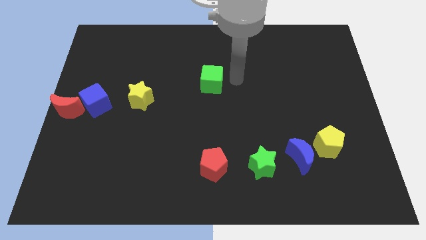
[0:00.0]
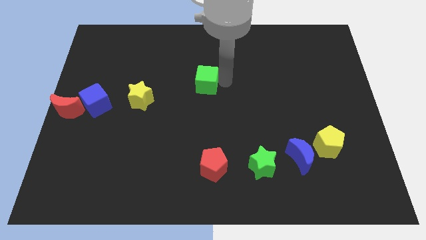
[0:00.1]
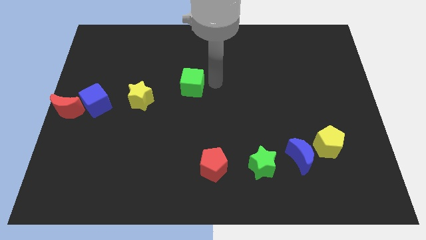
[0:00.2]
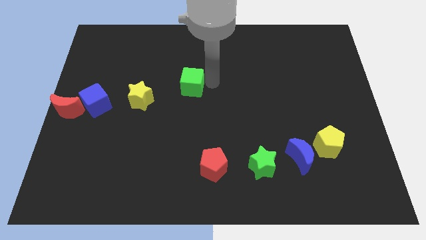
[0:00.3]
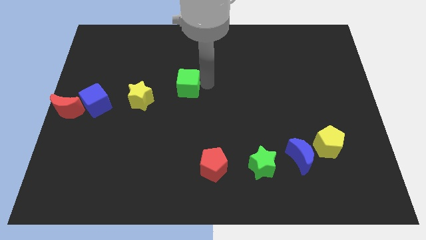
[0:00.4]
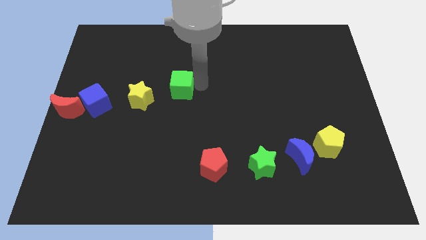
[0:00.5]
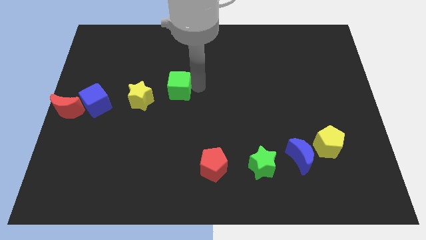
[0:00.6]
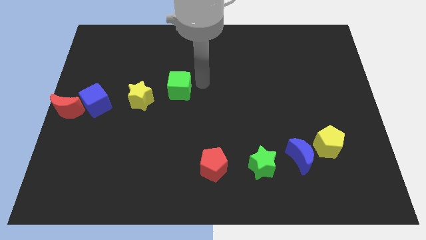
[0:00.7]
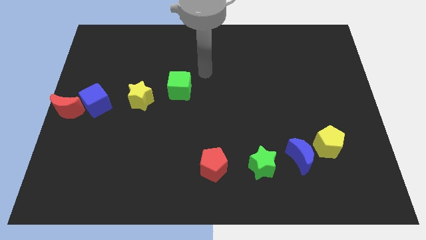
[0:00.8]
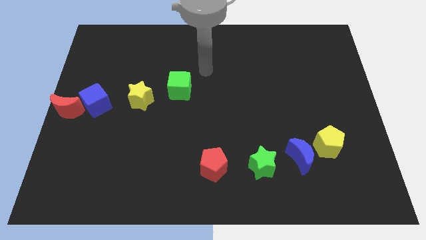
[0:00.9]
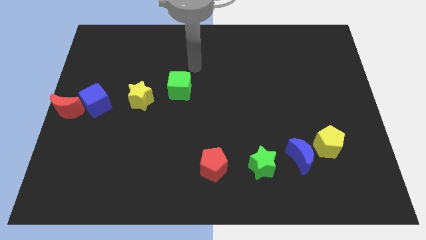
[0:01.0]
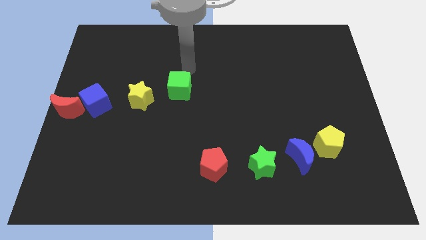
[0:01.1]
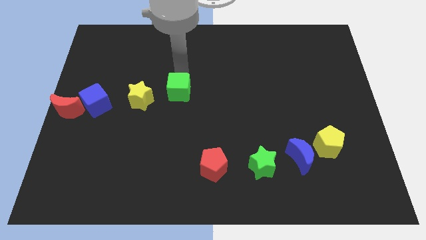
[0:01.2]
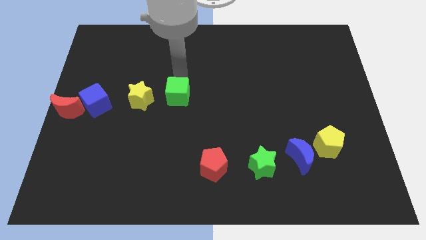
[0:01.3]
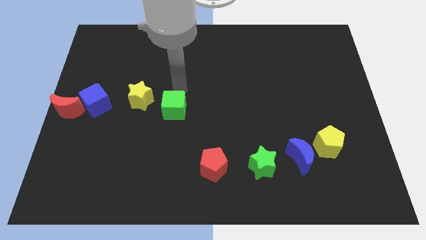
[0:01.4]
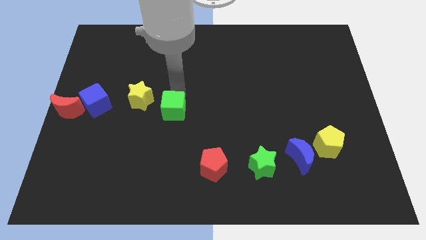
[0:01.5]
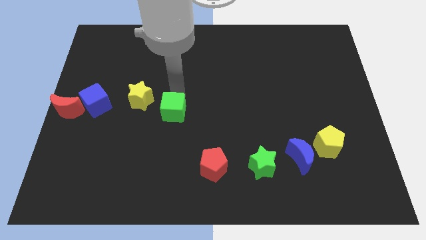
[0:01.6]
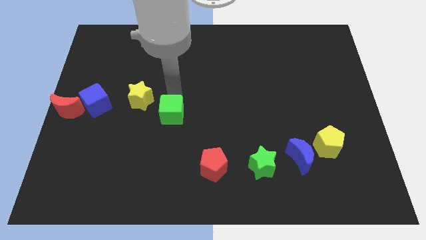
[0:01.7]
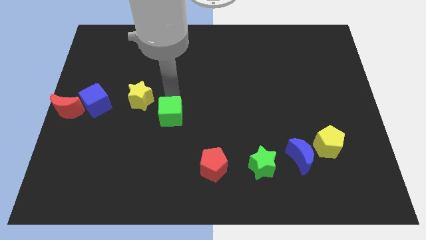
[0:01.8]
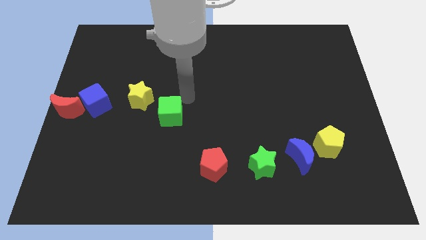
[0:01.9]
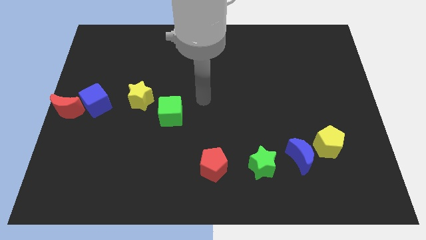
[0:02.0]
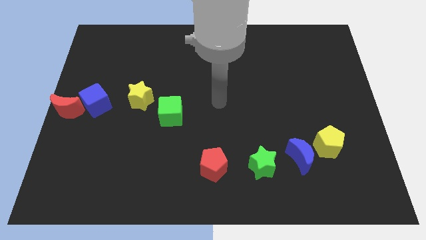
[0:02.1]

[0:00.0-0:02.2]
slide green cube diagonal to red pentagon

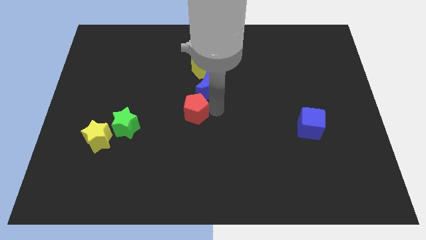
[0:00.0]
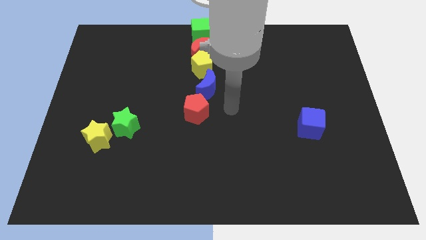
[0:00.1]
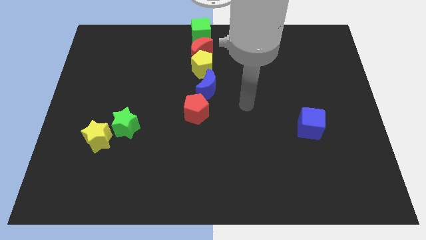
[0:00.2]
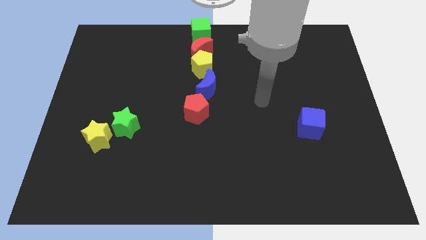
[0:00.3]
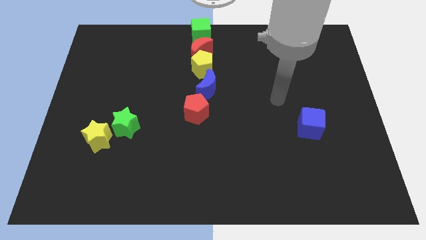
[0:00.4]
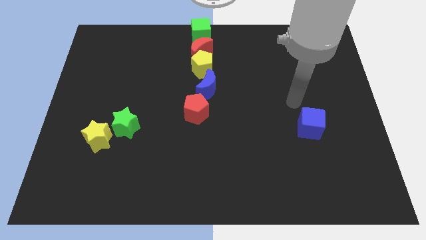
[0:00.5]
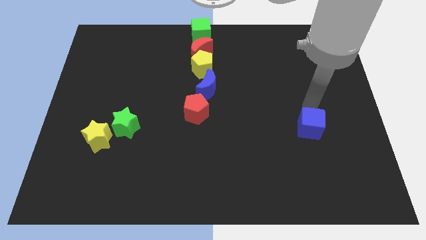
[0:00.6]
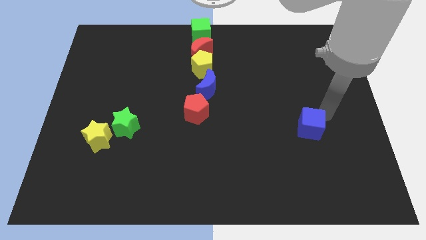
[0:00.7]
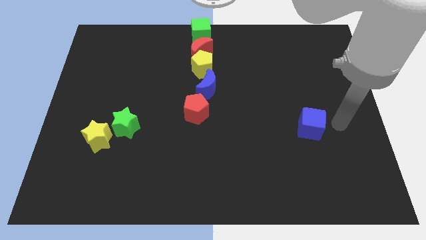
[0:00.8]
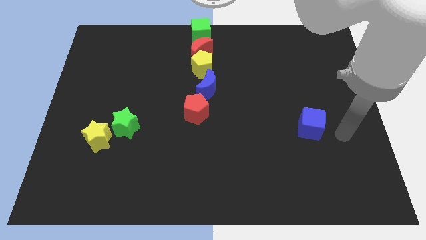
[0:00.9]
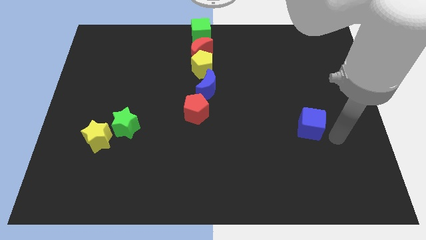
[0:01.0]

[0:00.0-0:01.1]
point your arm at the right of the blue cube

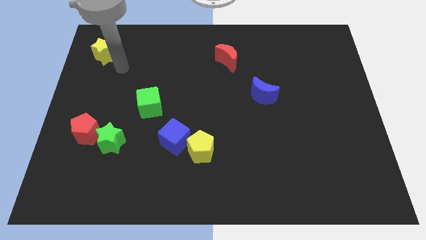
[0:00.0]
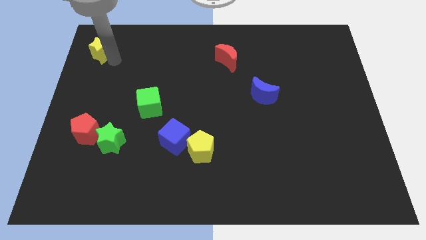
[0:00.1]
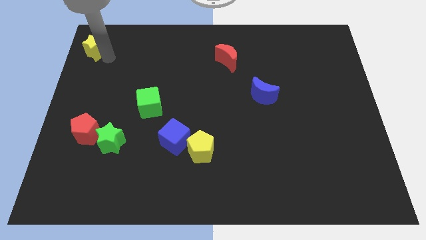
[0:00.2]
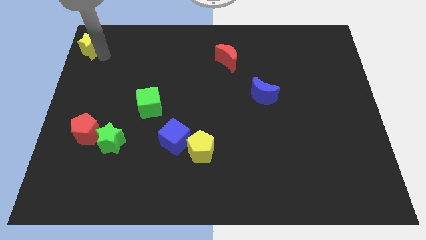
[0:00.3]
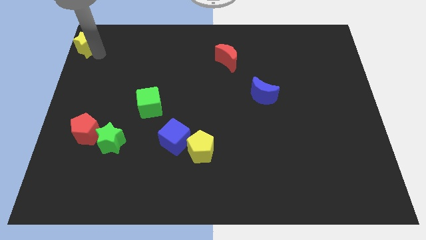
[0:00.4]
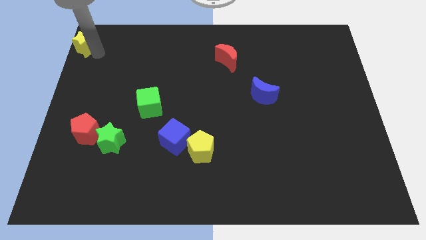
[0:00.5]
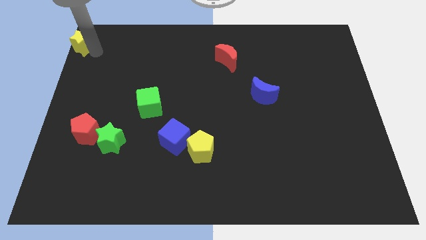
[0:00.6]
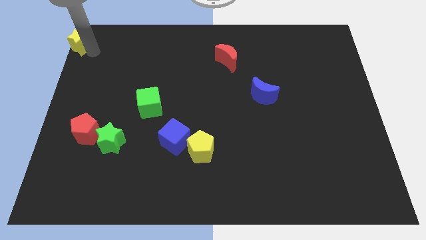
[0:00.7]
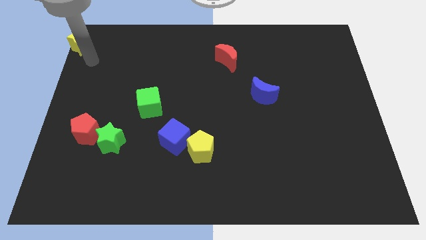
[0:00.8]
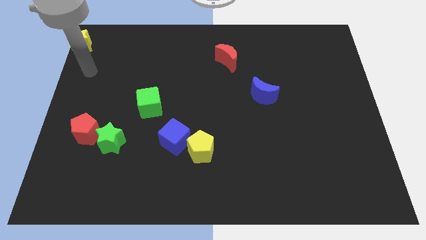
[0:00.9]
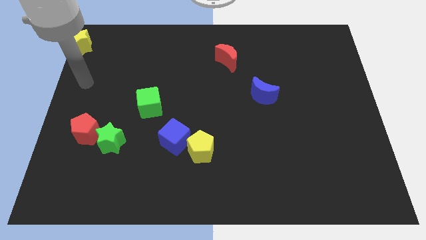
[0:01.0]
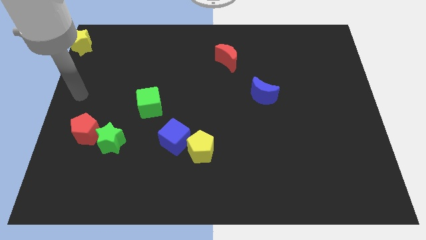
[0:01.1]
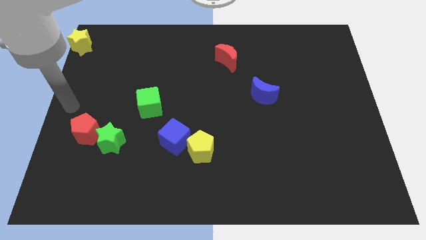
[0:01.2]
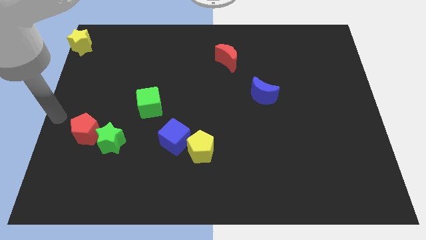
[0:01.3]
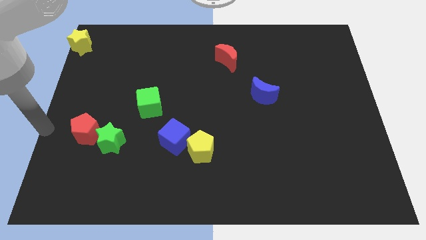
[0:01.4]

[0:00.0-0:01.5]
place the yellow star at the top left corner of the board

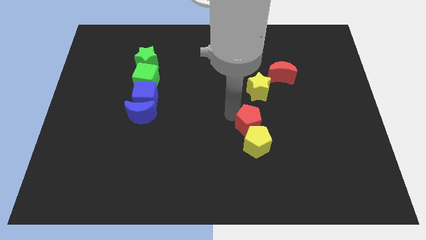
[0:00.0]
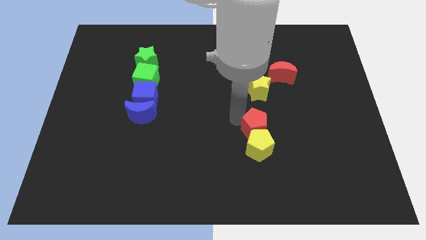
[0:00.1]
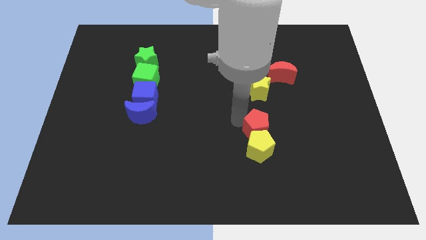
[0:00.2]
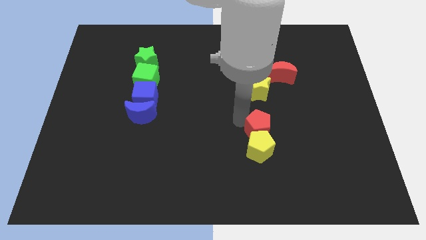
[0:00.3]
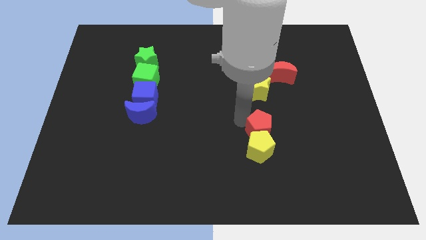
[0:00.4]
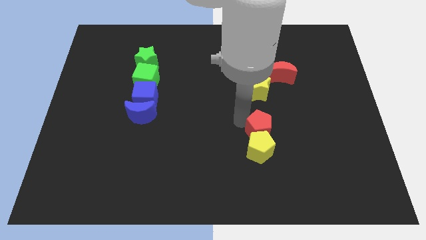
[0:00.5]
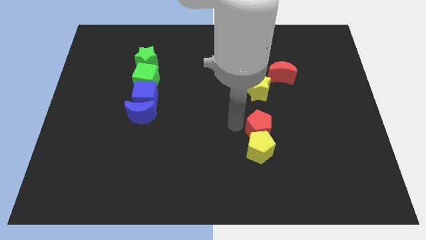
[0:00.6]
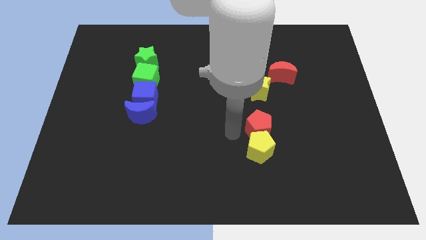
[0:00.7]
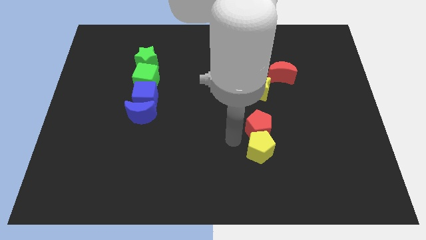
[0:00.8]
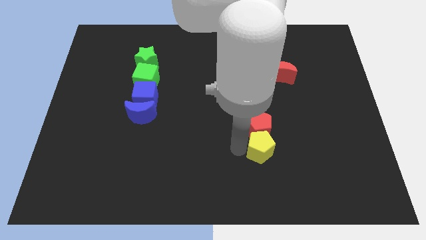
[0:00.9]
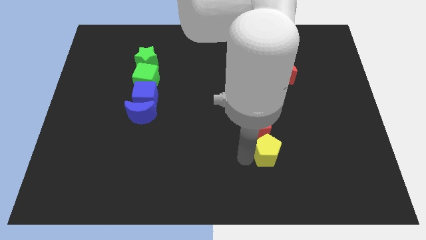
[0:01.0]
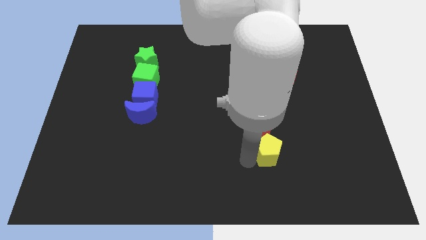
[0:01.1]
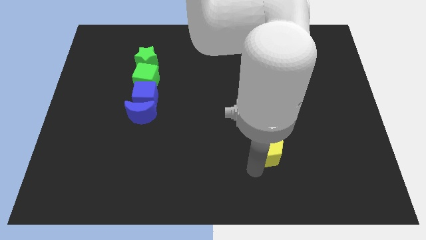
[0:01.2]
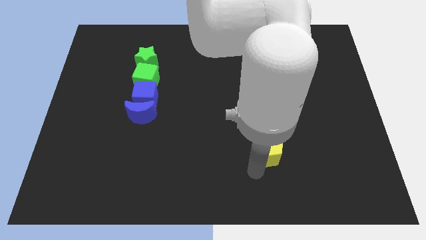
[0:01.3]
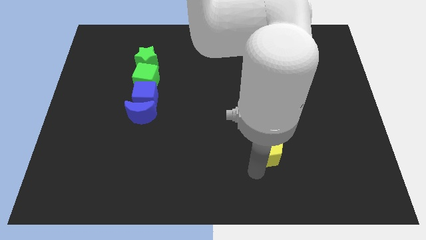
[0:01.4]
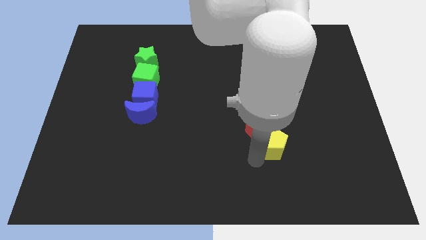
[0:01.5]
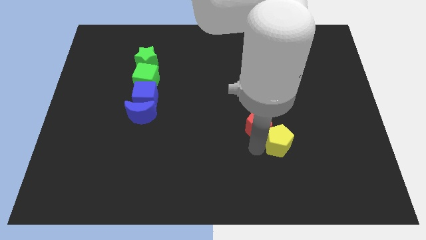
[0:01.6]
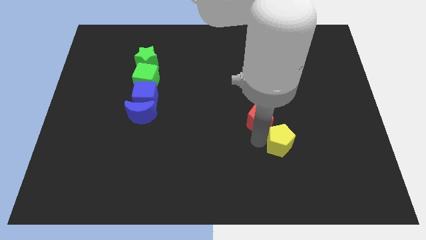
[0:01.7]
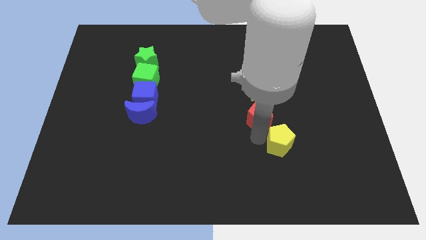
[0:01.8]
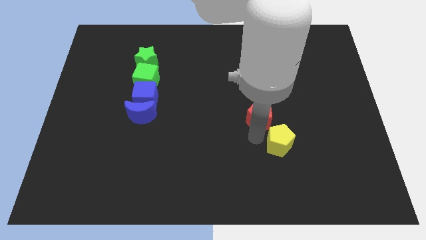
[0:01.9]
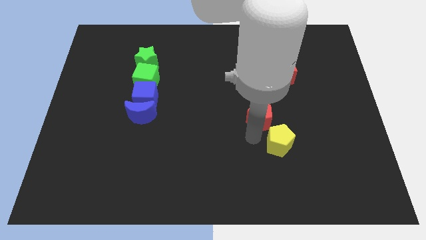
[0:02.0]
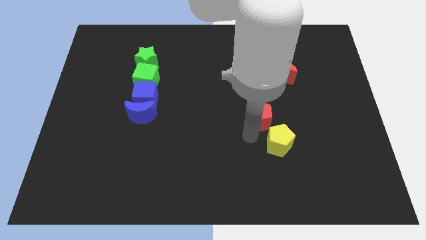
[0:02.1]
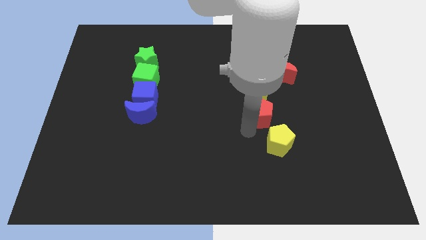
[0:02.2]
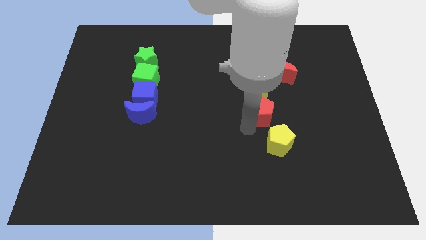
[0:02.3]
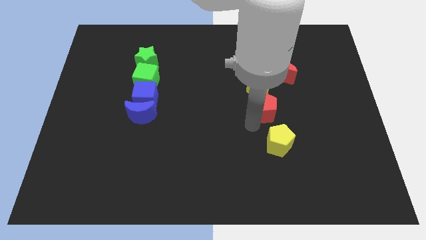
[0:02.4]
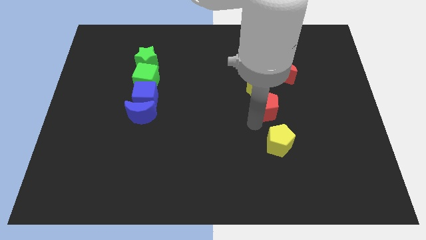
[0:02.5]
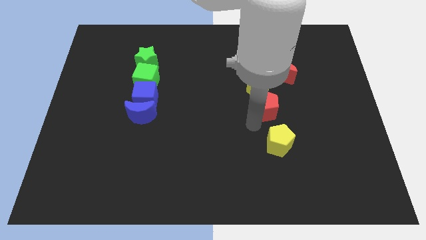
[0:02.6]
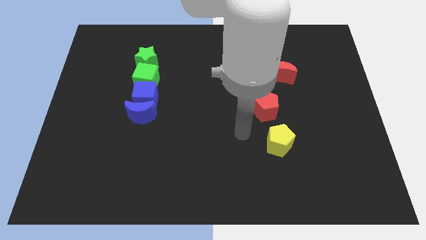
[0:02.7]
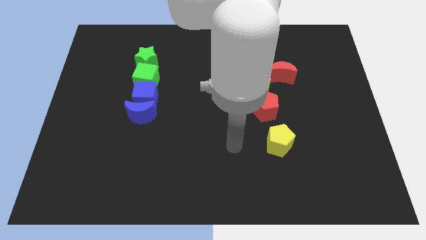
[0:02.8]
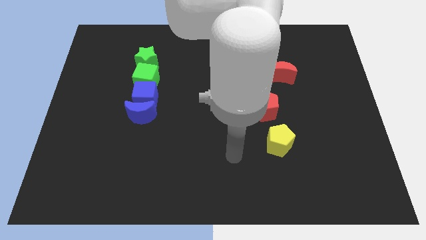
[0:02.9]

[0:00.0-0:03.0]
move the red pentagon close to the yellow star

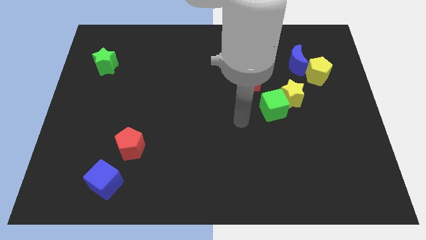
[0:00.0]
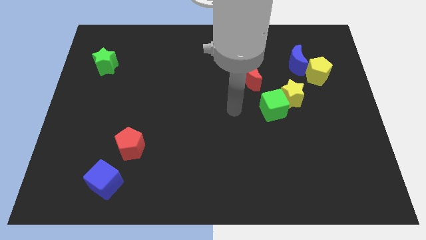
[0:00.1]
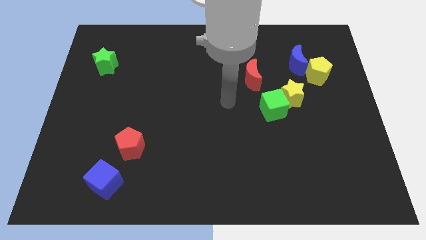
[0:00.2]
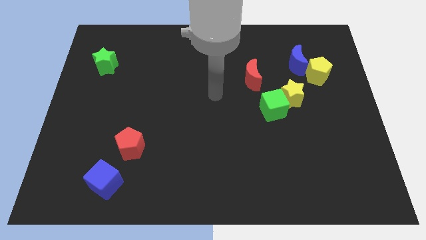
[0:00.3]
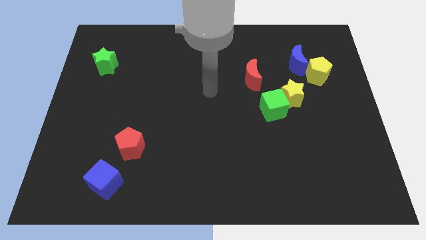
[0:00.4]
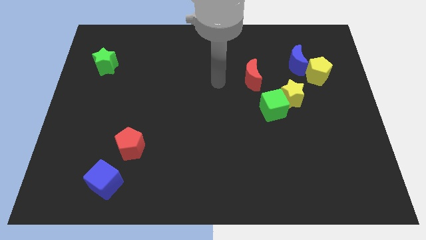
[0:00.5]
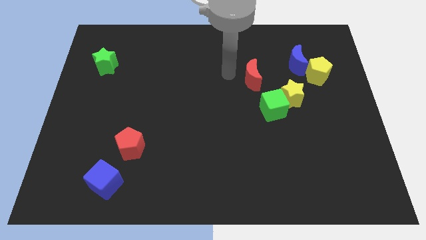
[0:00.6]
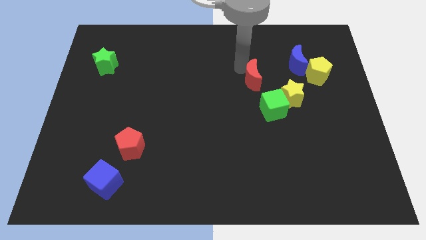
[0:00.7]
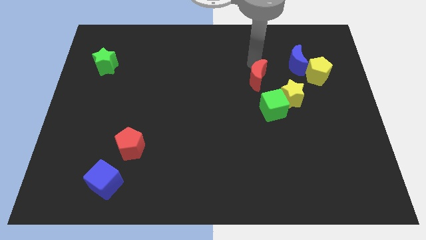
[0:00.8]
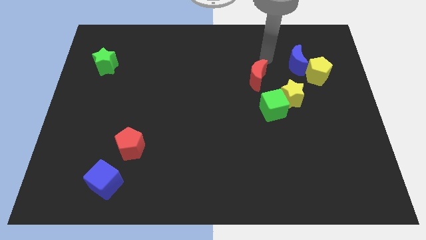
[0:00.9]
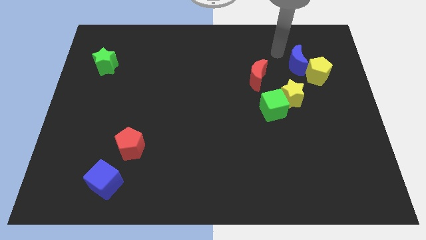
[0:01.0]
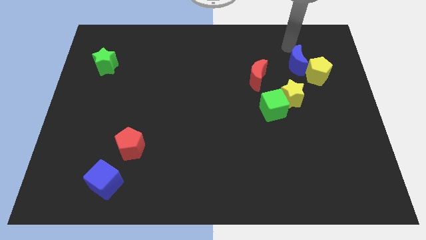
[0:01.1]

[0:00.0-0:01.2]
tap the red moon slightly
